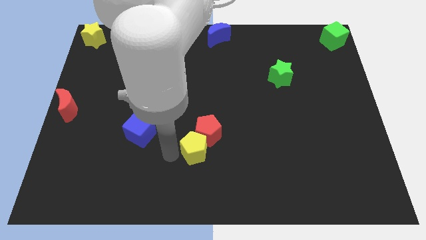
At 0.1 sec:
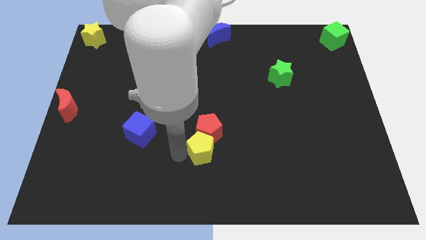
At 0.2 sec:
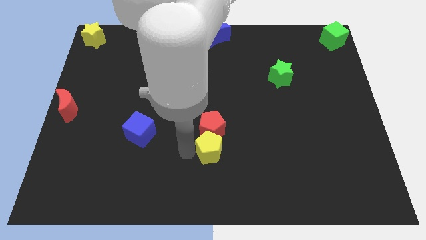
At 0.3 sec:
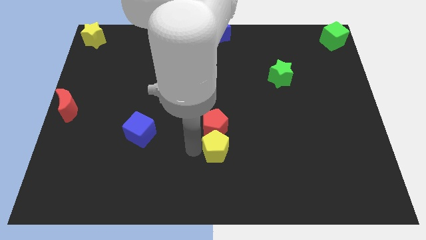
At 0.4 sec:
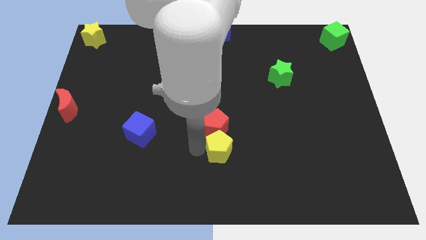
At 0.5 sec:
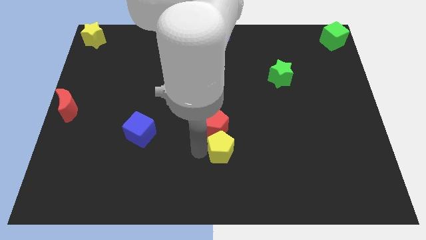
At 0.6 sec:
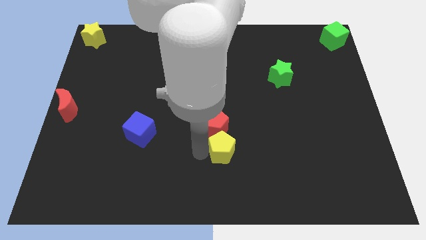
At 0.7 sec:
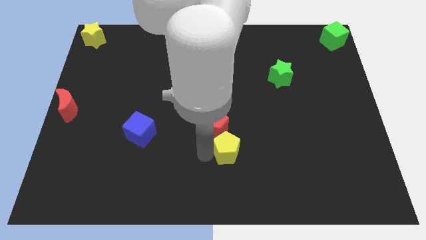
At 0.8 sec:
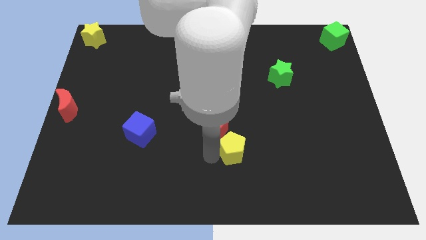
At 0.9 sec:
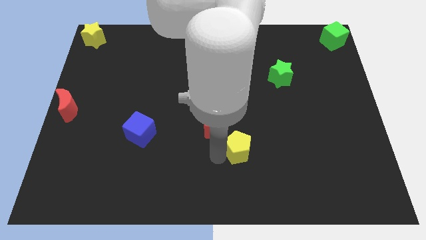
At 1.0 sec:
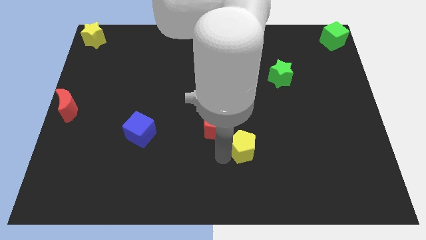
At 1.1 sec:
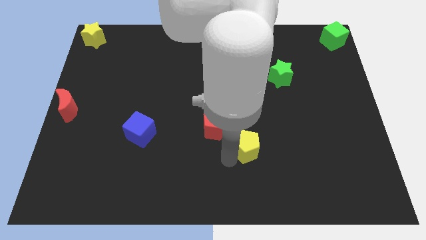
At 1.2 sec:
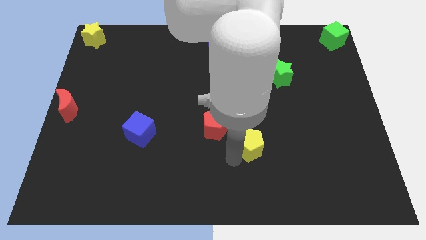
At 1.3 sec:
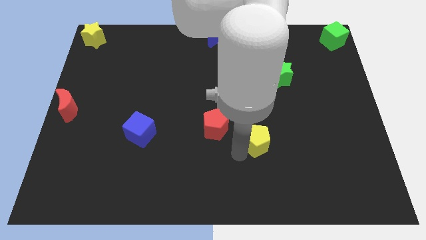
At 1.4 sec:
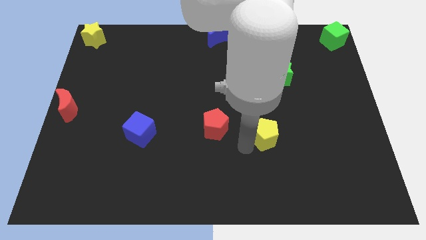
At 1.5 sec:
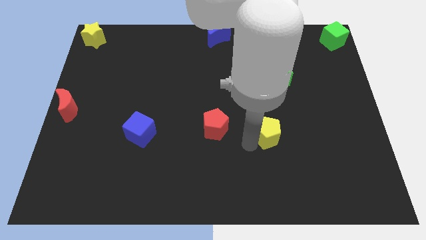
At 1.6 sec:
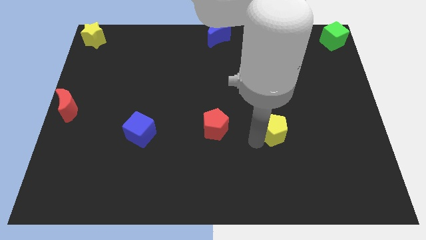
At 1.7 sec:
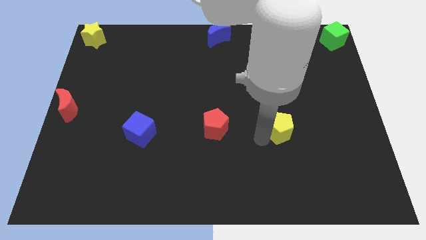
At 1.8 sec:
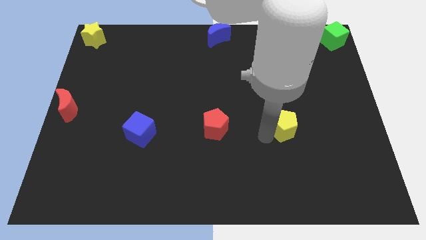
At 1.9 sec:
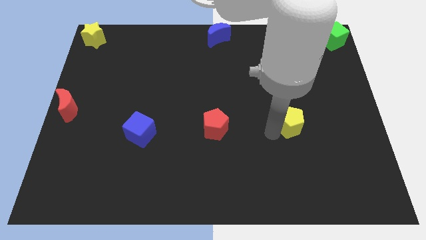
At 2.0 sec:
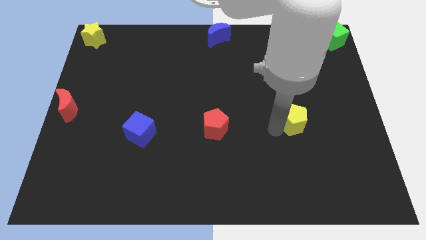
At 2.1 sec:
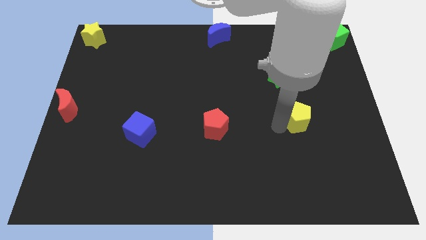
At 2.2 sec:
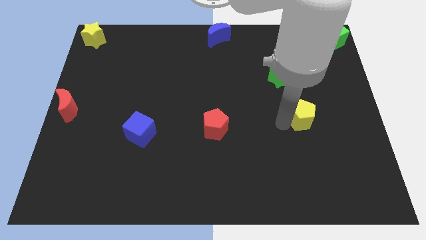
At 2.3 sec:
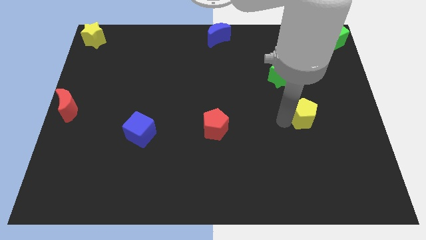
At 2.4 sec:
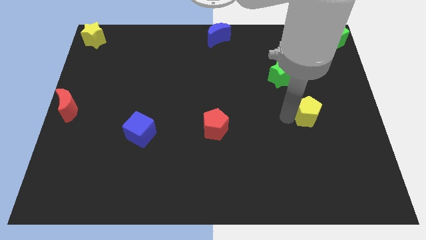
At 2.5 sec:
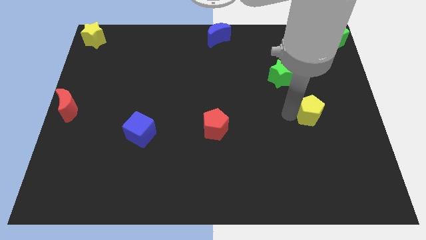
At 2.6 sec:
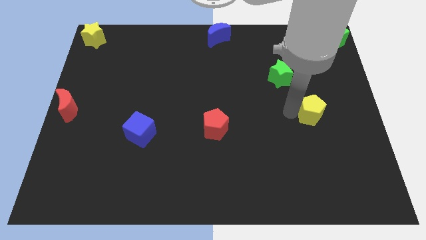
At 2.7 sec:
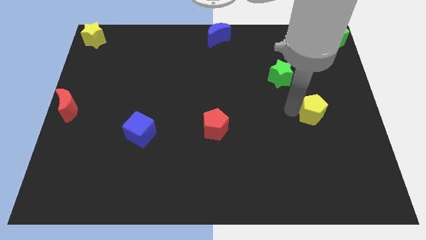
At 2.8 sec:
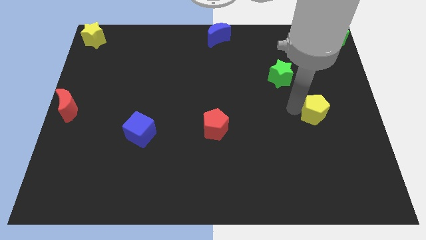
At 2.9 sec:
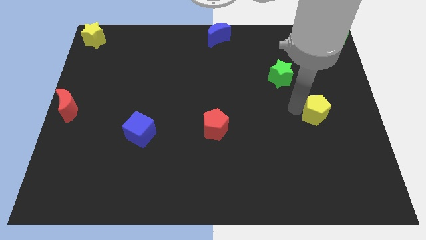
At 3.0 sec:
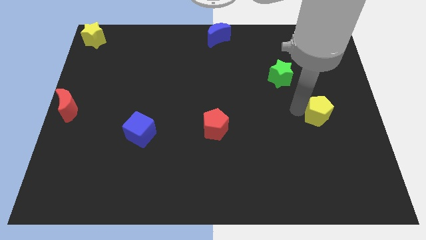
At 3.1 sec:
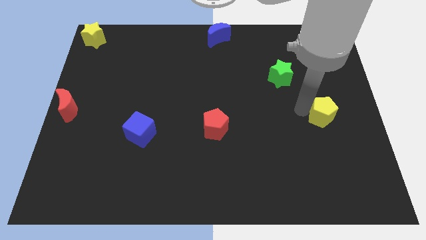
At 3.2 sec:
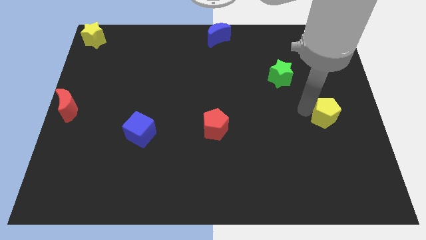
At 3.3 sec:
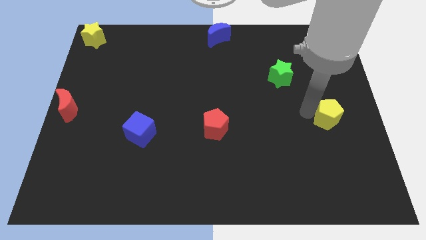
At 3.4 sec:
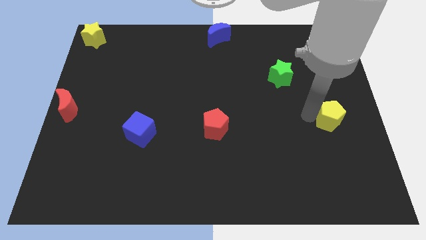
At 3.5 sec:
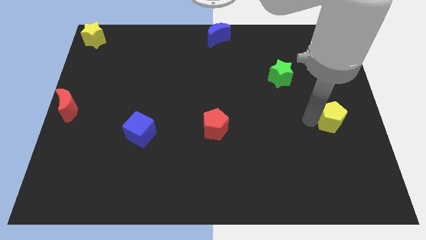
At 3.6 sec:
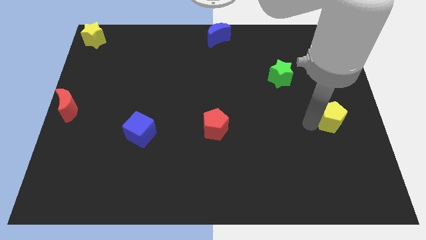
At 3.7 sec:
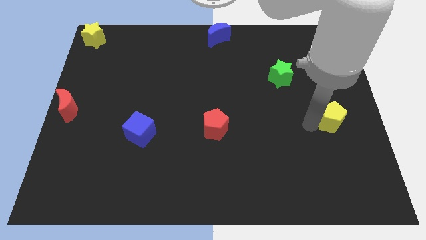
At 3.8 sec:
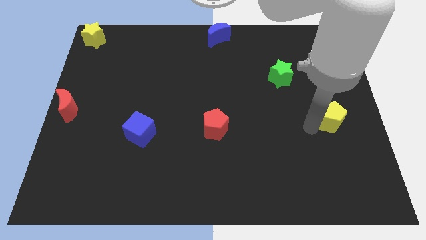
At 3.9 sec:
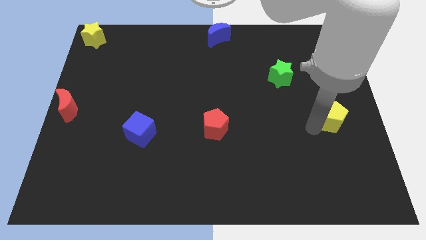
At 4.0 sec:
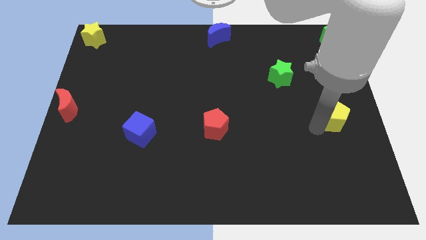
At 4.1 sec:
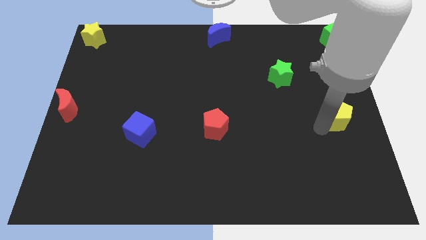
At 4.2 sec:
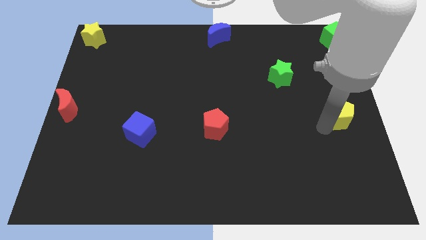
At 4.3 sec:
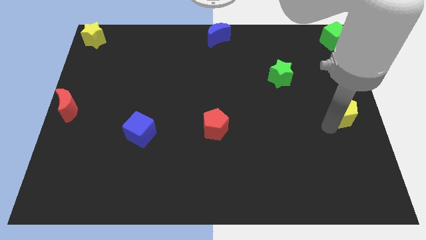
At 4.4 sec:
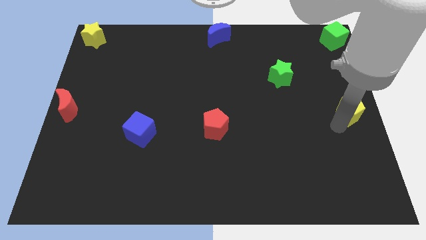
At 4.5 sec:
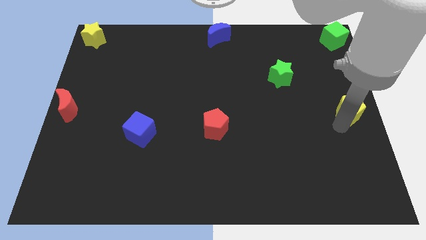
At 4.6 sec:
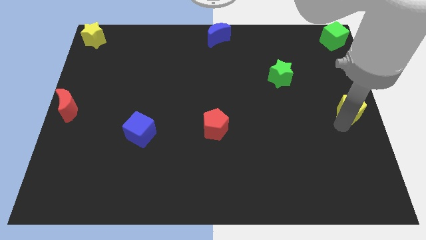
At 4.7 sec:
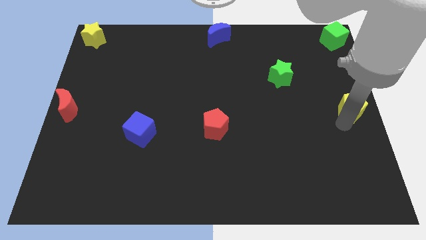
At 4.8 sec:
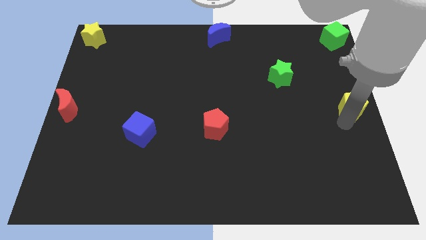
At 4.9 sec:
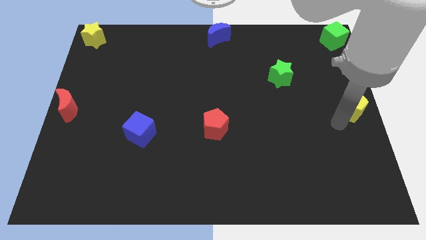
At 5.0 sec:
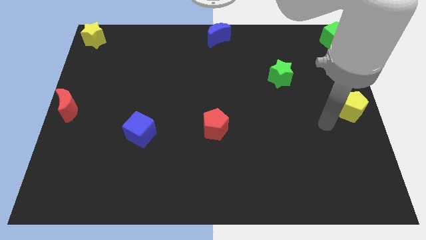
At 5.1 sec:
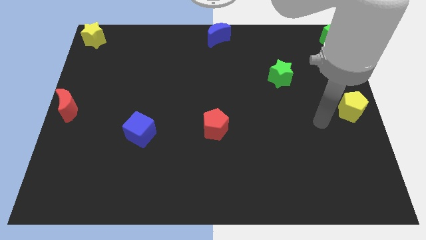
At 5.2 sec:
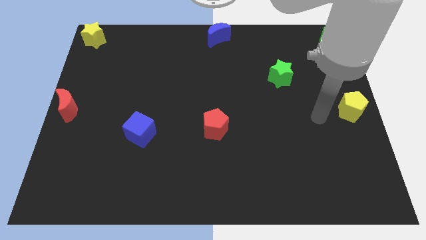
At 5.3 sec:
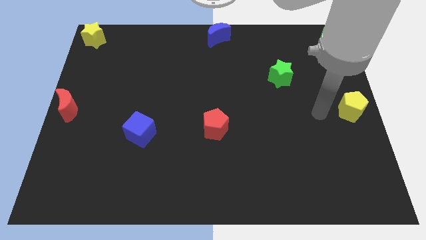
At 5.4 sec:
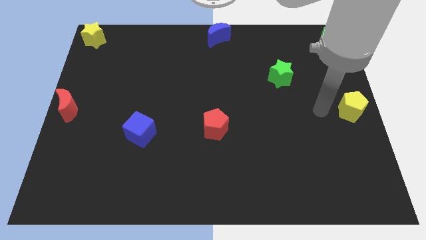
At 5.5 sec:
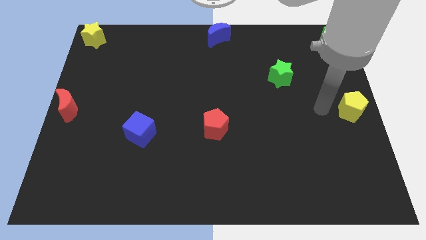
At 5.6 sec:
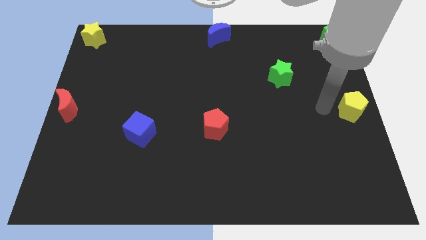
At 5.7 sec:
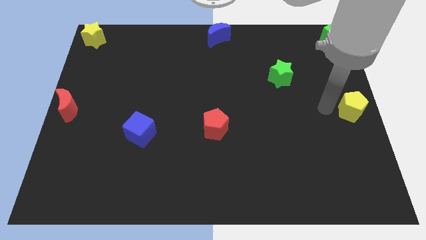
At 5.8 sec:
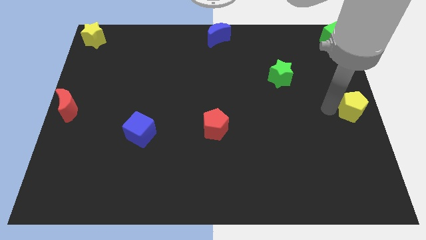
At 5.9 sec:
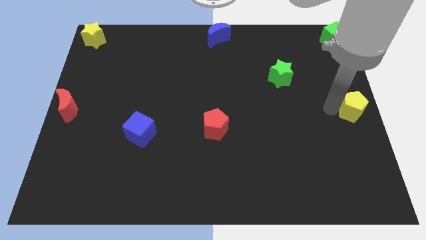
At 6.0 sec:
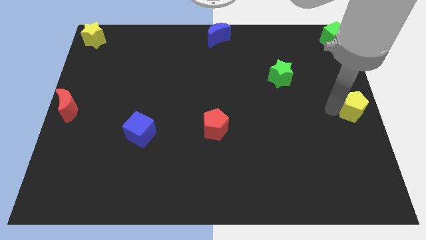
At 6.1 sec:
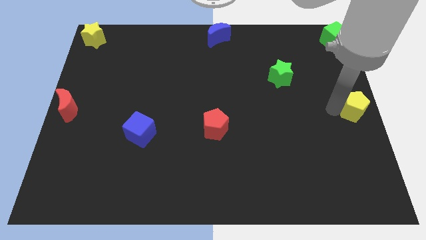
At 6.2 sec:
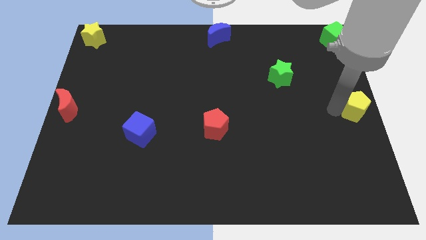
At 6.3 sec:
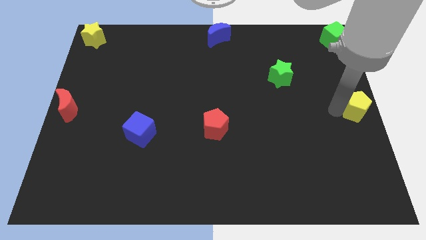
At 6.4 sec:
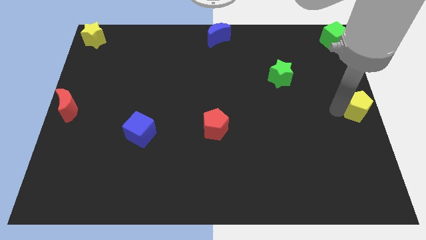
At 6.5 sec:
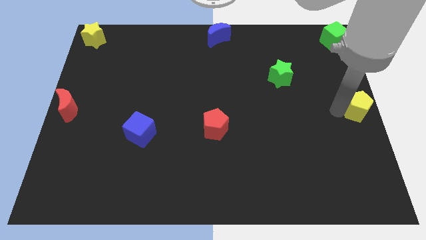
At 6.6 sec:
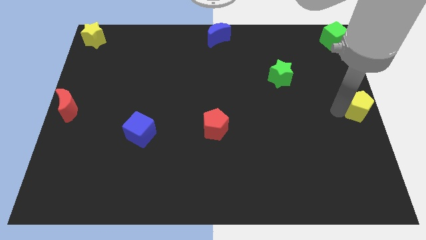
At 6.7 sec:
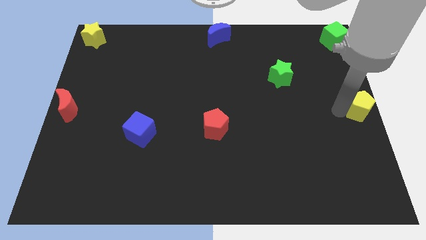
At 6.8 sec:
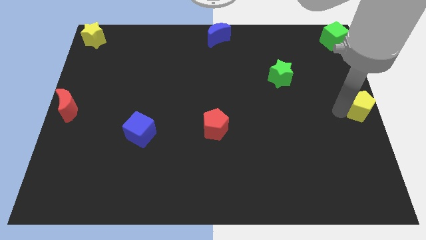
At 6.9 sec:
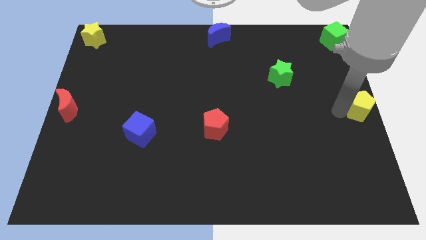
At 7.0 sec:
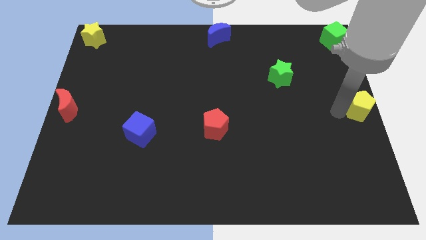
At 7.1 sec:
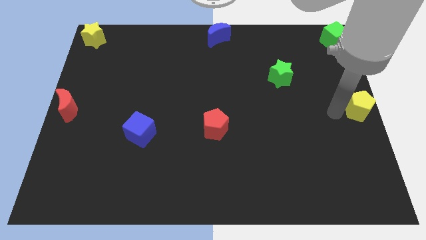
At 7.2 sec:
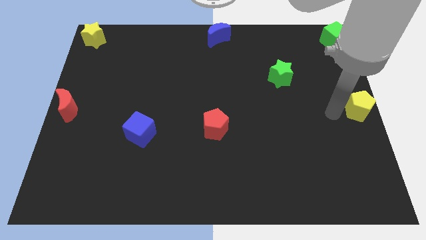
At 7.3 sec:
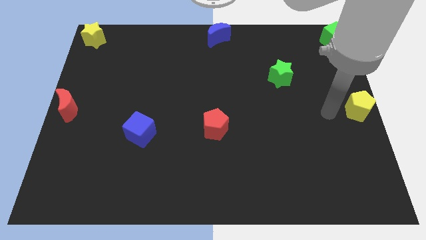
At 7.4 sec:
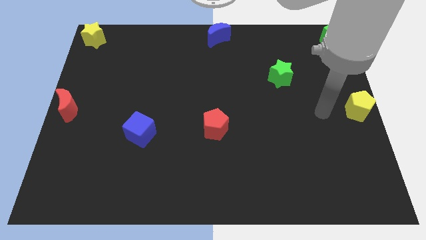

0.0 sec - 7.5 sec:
put the yellow pentagon at the center right side of the board

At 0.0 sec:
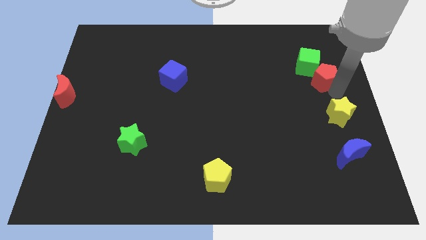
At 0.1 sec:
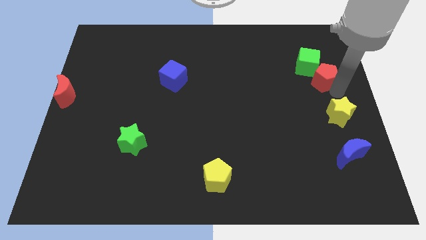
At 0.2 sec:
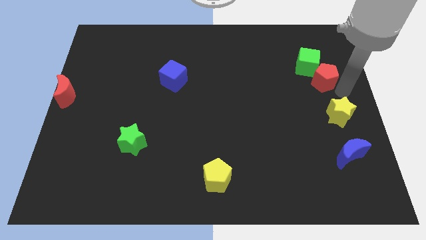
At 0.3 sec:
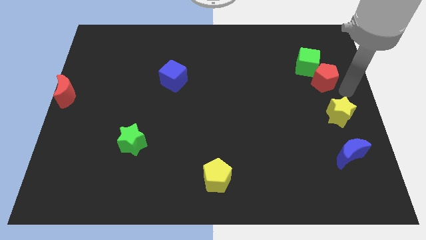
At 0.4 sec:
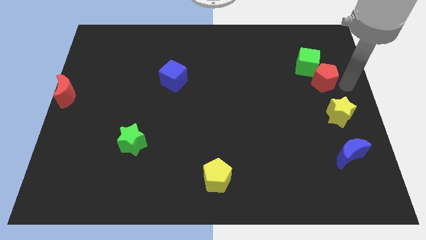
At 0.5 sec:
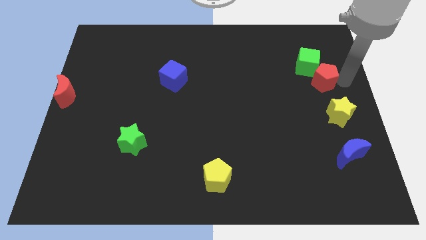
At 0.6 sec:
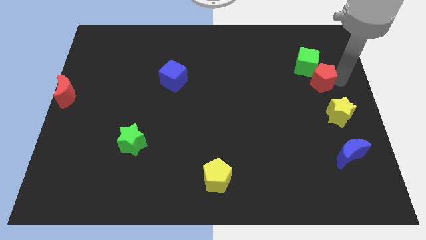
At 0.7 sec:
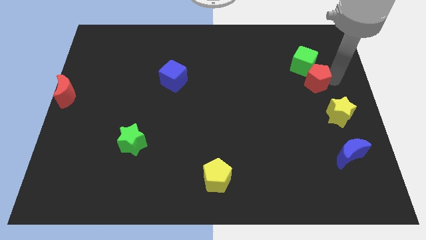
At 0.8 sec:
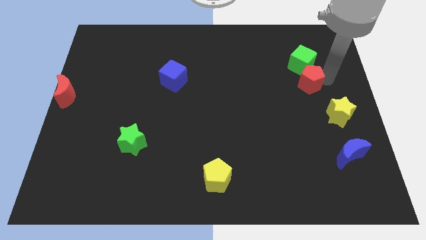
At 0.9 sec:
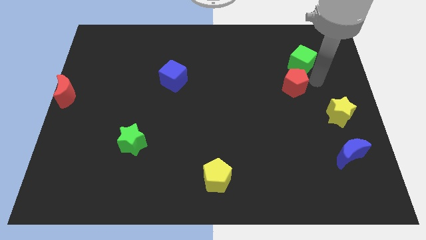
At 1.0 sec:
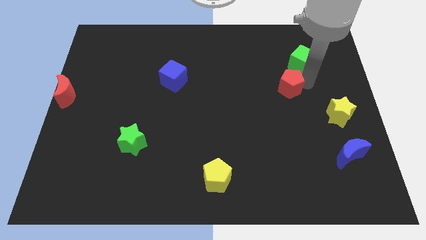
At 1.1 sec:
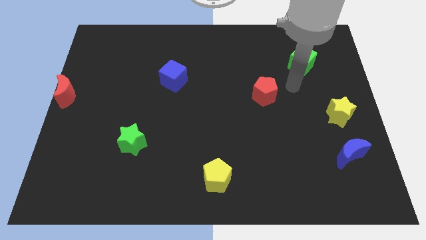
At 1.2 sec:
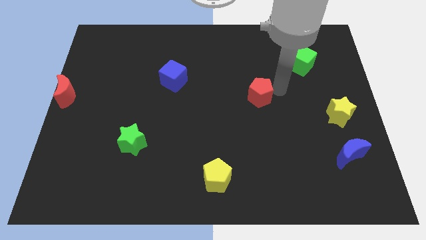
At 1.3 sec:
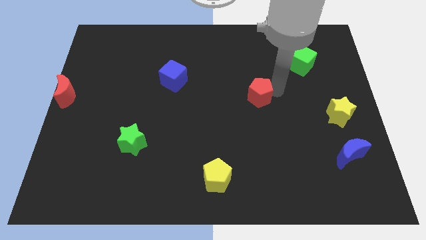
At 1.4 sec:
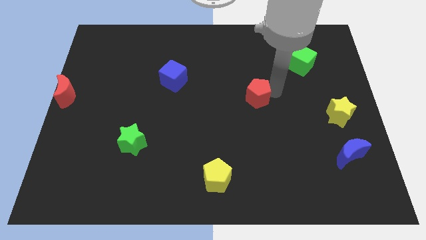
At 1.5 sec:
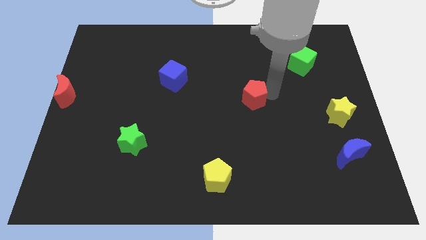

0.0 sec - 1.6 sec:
move the red pentagon towards the center
